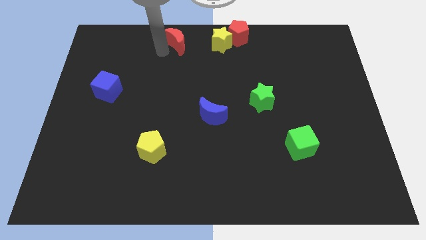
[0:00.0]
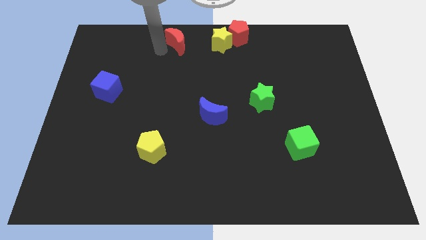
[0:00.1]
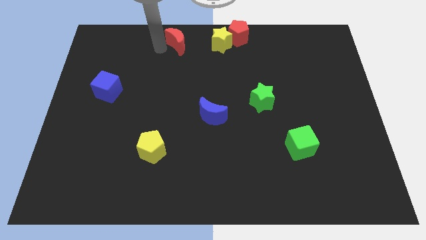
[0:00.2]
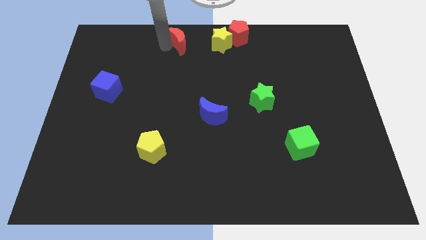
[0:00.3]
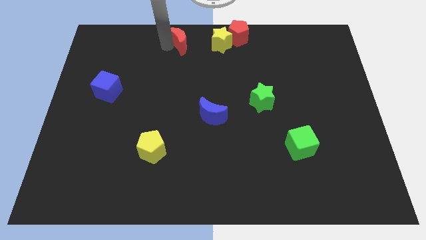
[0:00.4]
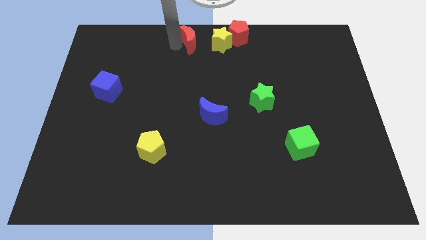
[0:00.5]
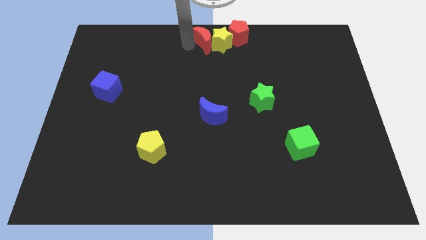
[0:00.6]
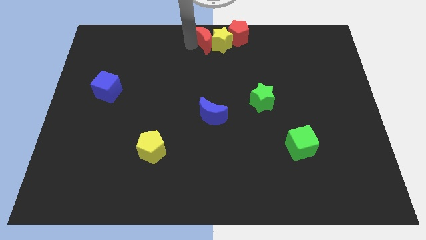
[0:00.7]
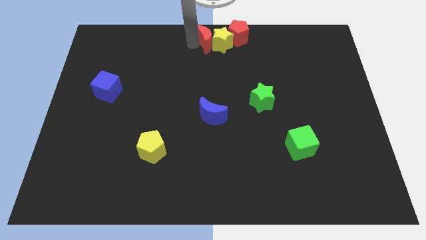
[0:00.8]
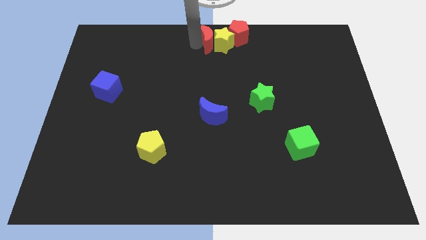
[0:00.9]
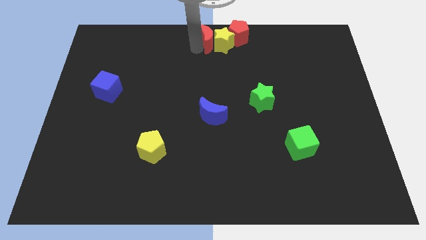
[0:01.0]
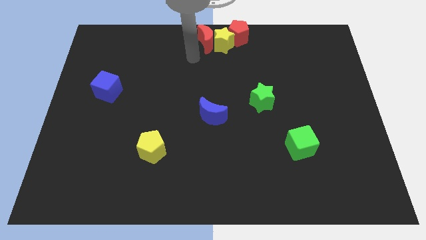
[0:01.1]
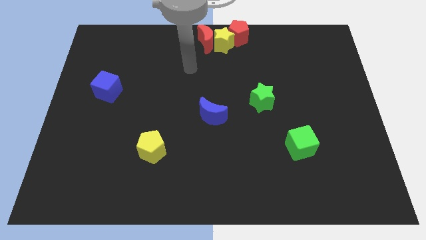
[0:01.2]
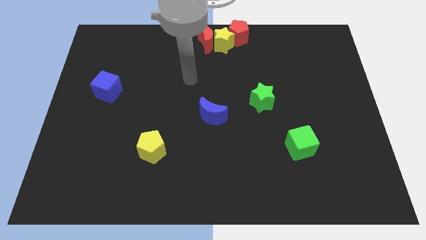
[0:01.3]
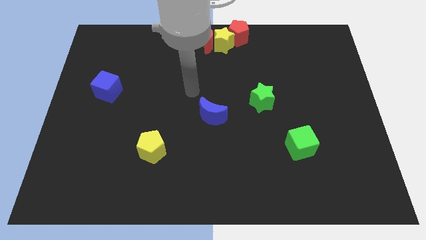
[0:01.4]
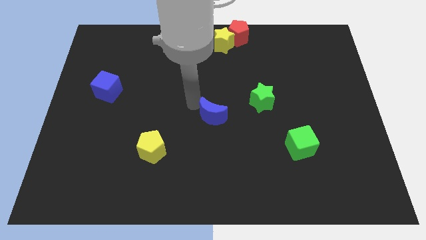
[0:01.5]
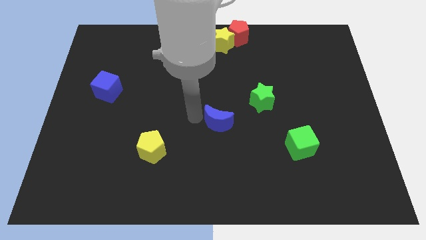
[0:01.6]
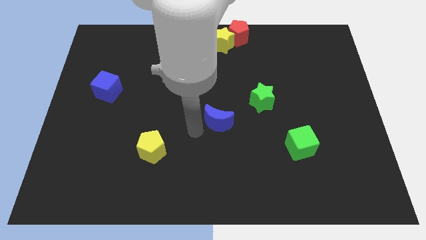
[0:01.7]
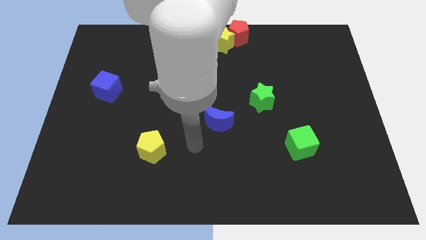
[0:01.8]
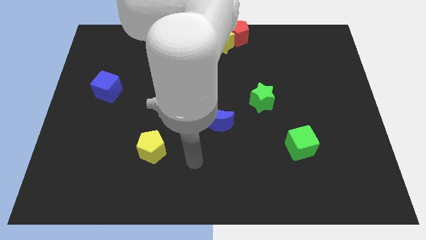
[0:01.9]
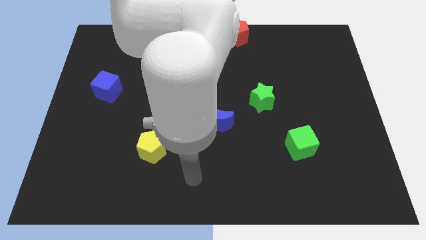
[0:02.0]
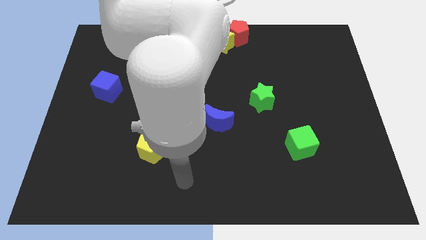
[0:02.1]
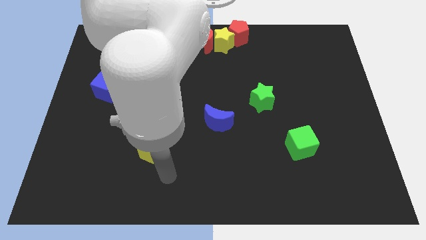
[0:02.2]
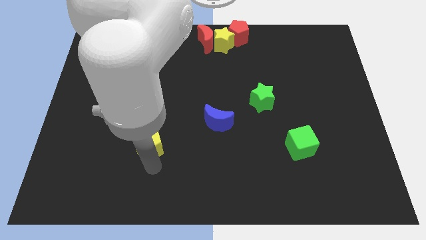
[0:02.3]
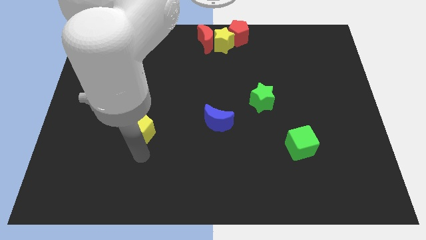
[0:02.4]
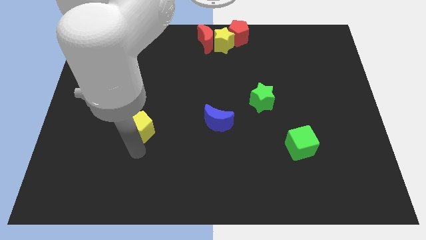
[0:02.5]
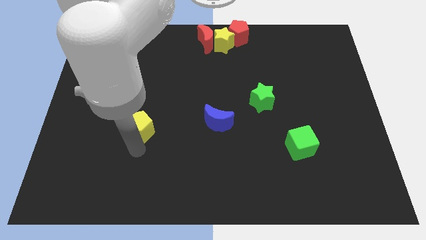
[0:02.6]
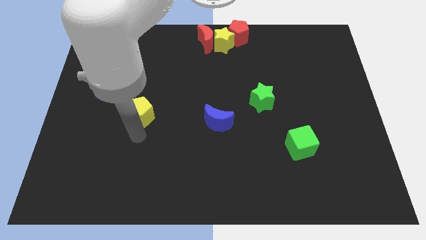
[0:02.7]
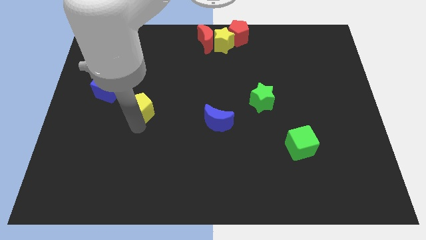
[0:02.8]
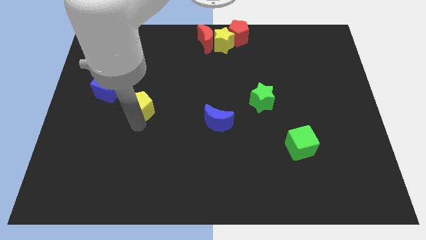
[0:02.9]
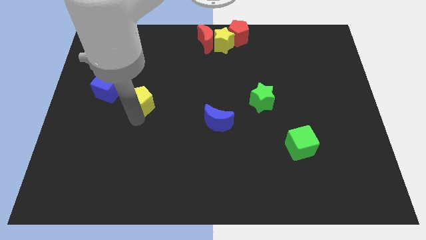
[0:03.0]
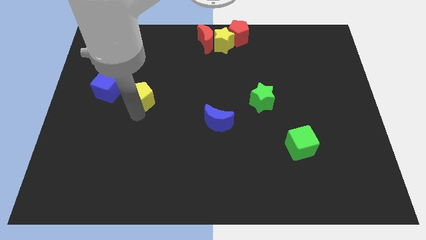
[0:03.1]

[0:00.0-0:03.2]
move yellow pentagon upwards

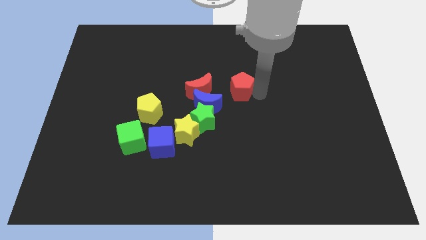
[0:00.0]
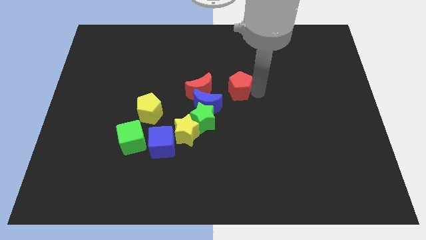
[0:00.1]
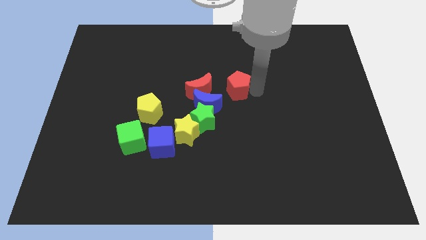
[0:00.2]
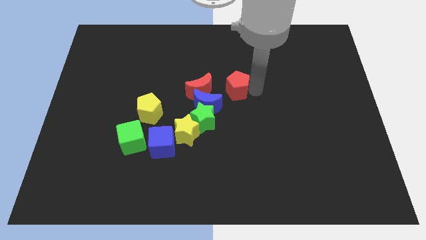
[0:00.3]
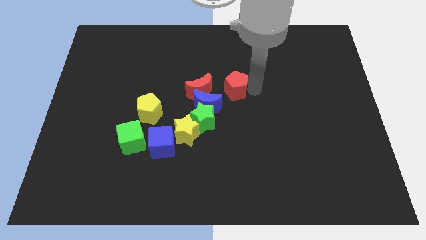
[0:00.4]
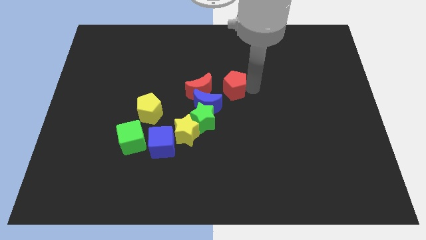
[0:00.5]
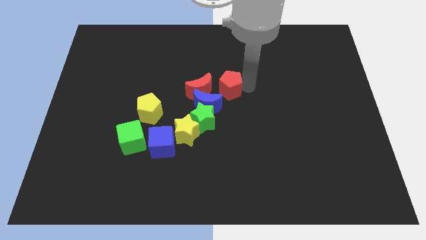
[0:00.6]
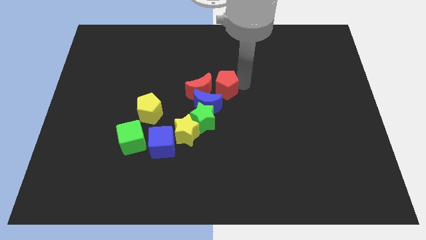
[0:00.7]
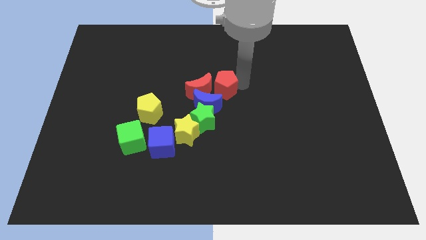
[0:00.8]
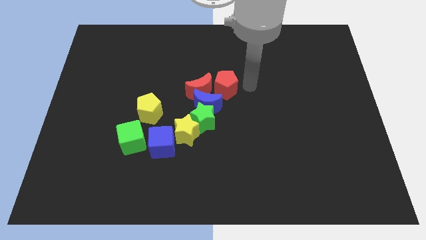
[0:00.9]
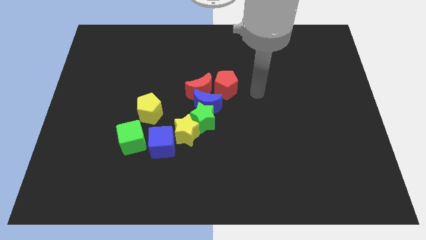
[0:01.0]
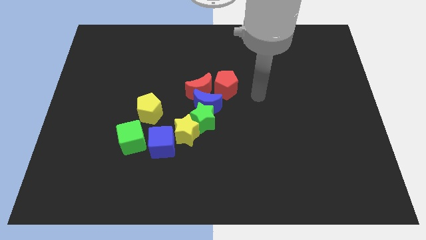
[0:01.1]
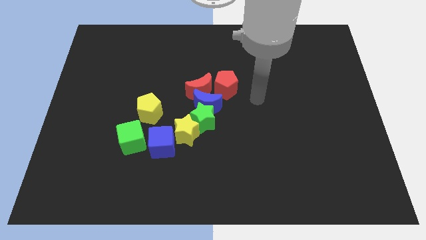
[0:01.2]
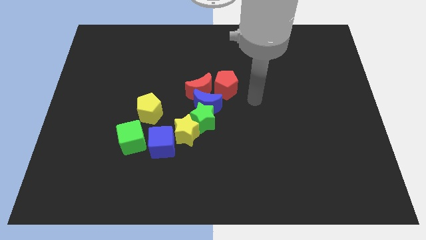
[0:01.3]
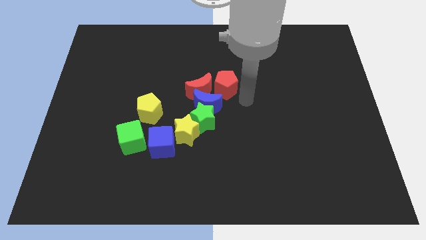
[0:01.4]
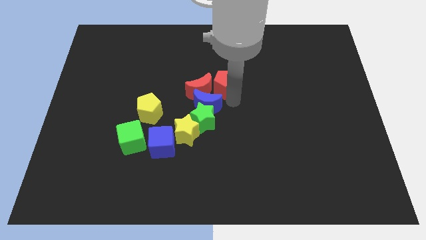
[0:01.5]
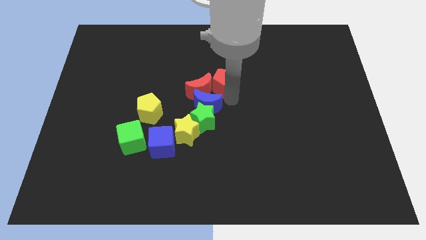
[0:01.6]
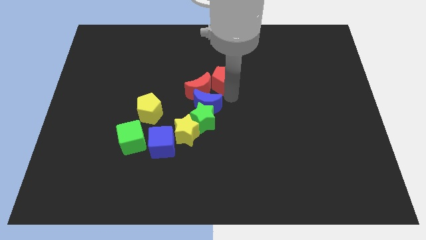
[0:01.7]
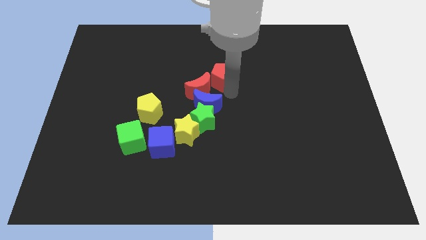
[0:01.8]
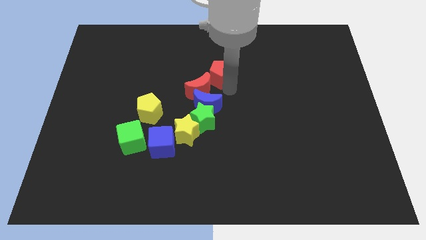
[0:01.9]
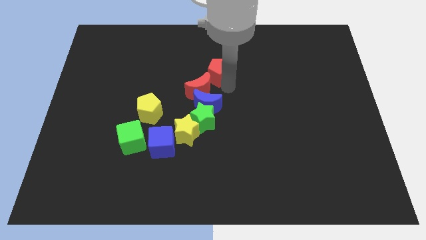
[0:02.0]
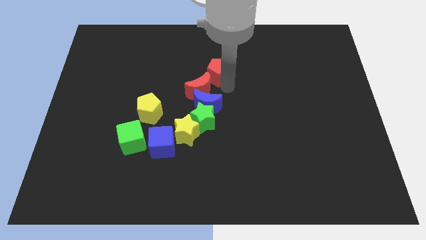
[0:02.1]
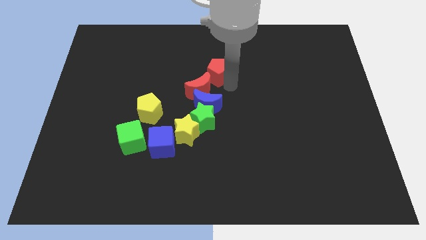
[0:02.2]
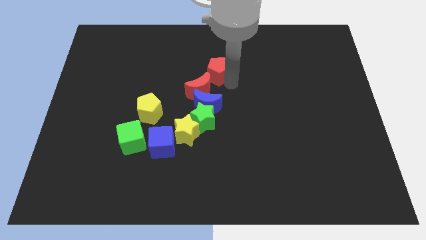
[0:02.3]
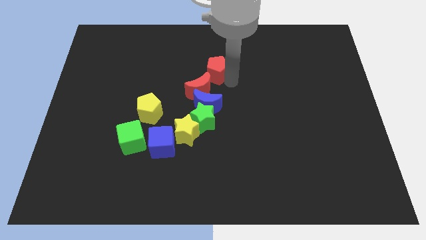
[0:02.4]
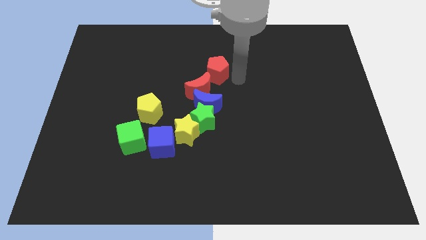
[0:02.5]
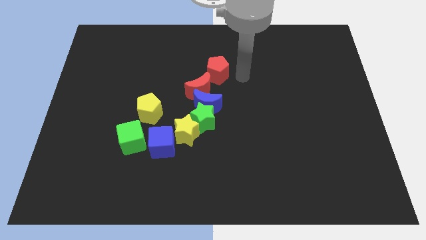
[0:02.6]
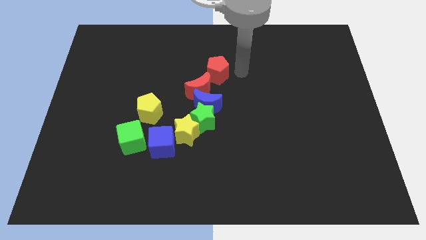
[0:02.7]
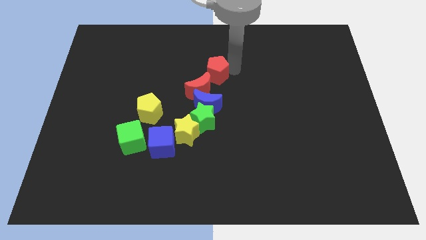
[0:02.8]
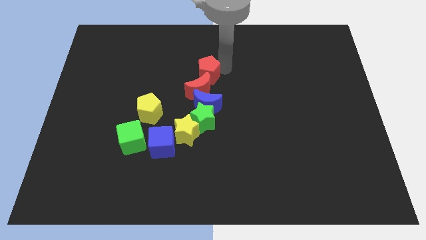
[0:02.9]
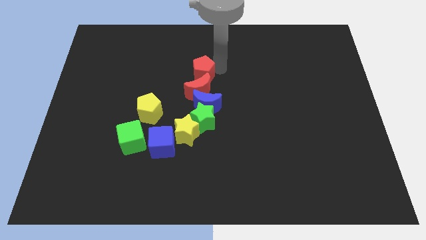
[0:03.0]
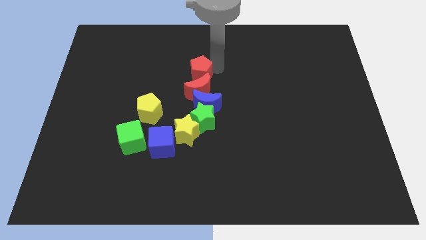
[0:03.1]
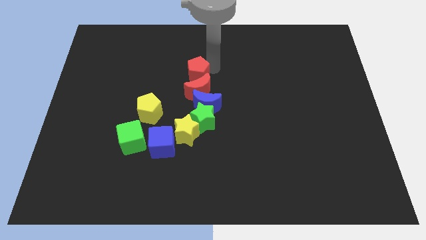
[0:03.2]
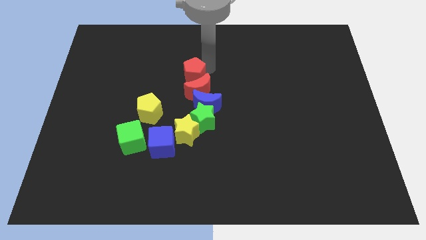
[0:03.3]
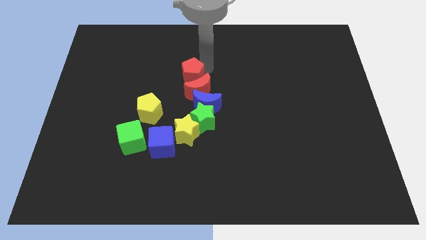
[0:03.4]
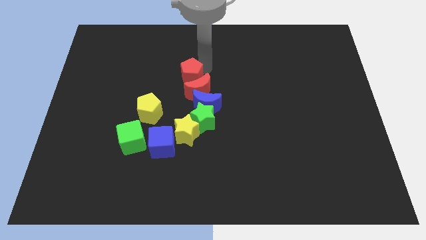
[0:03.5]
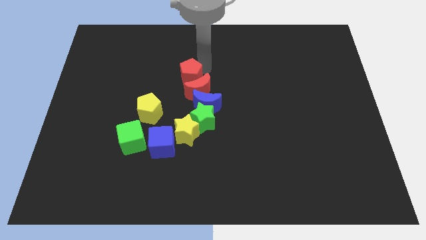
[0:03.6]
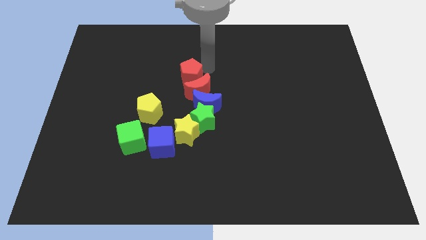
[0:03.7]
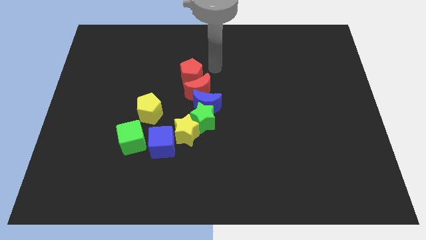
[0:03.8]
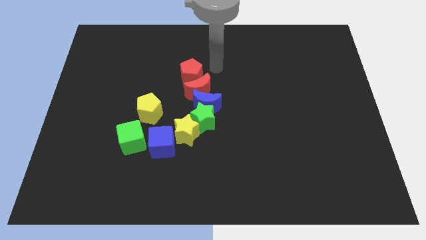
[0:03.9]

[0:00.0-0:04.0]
put the red pentagon above the red moon

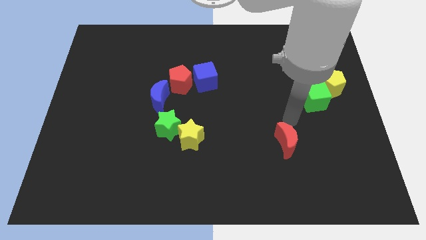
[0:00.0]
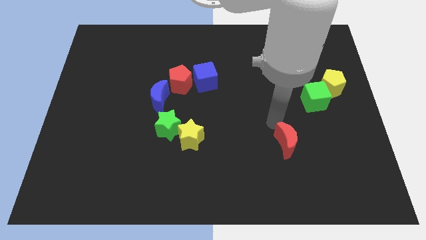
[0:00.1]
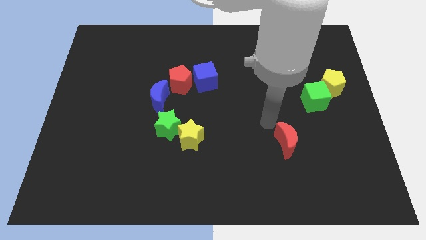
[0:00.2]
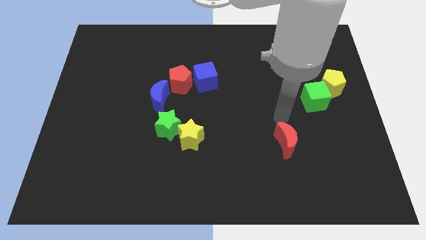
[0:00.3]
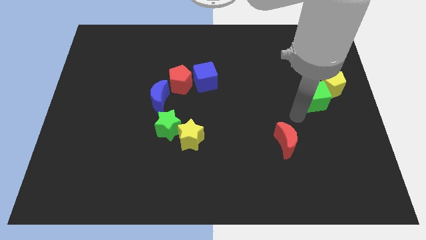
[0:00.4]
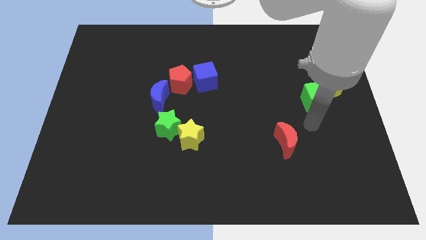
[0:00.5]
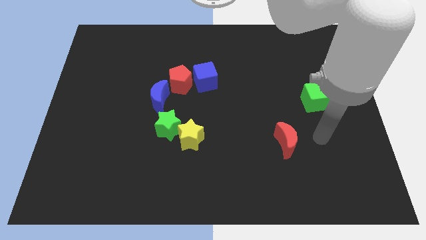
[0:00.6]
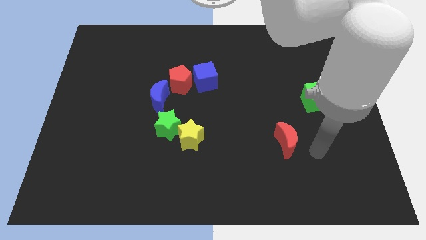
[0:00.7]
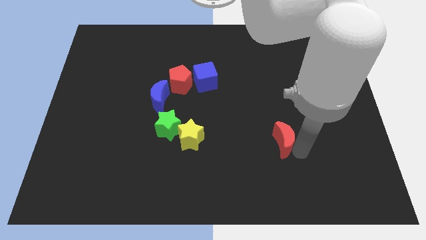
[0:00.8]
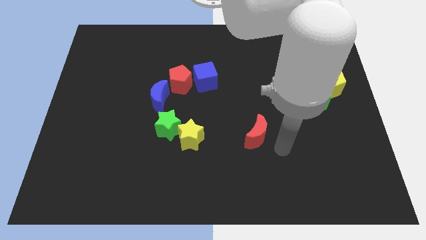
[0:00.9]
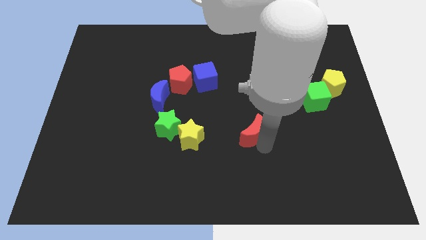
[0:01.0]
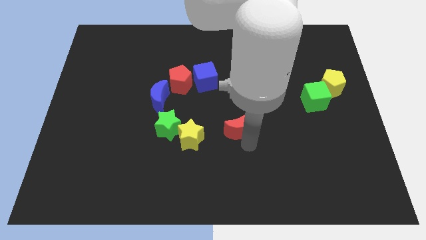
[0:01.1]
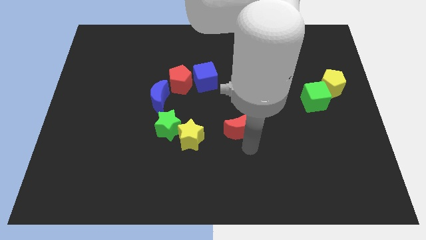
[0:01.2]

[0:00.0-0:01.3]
push the red crescent towards the yellow star

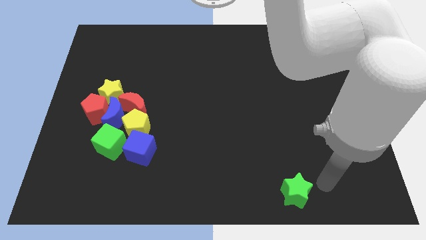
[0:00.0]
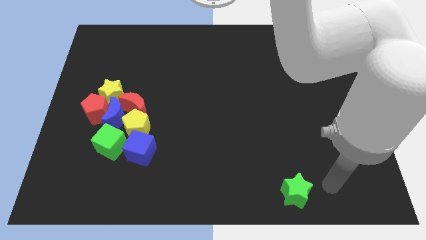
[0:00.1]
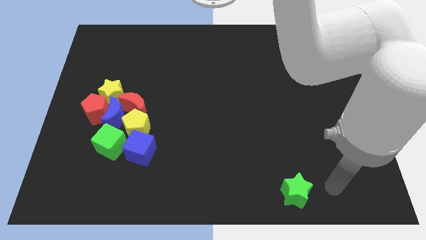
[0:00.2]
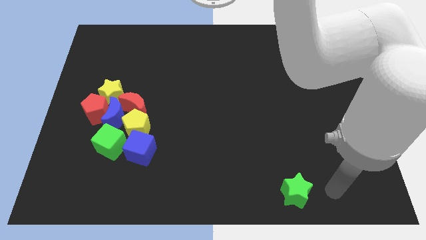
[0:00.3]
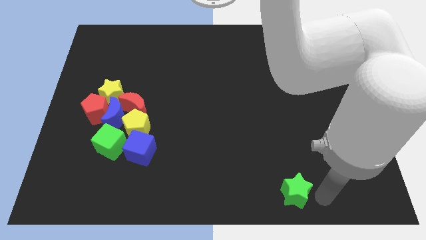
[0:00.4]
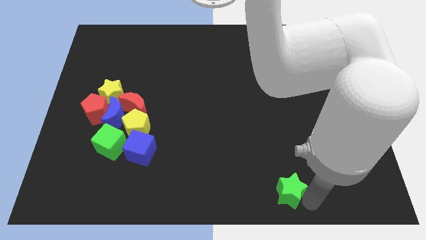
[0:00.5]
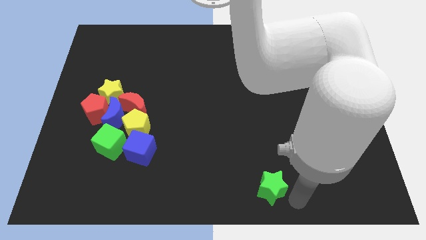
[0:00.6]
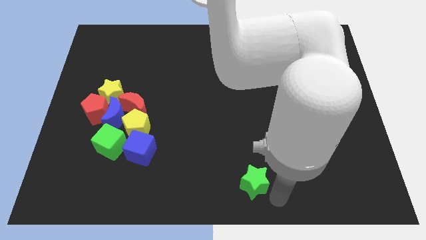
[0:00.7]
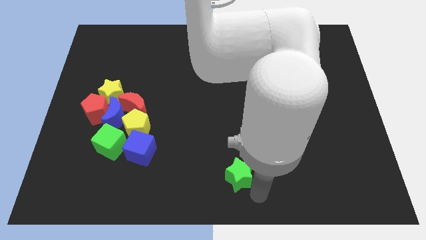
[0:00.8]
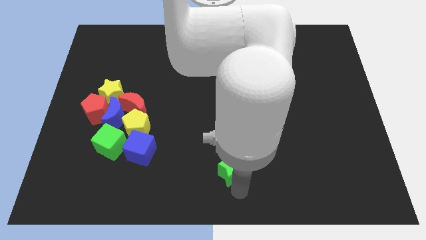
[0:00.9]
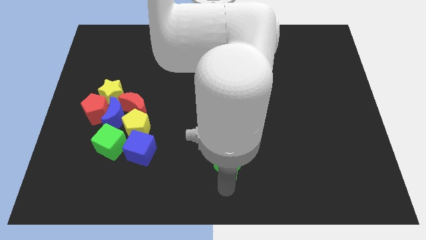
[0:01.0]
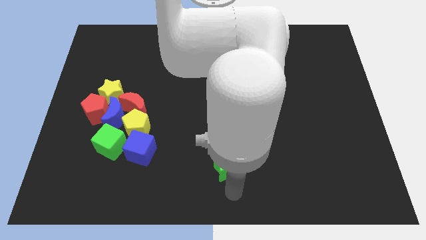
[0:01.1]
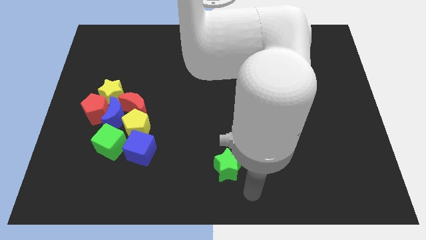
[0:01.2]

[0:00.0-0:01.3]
place the green star at the middle bottom
